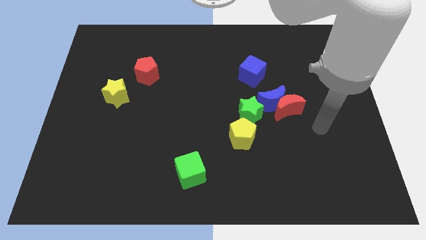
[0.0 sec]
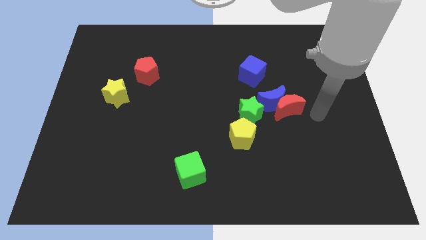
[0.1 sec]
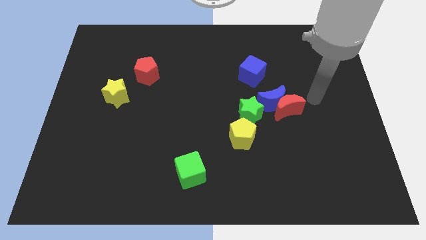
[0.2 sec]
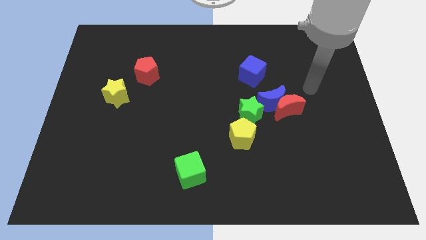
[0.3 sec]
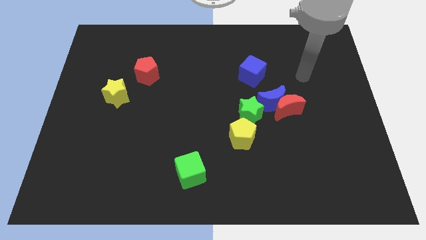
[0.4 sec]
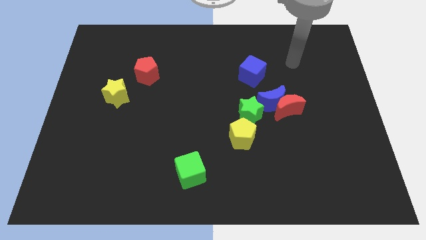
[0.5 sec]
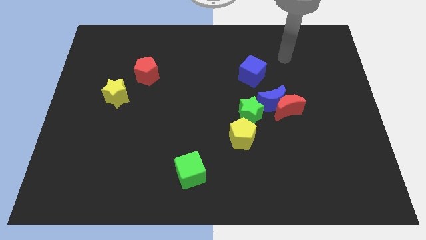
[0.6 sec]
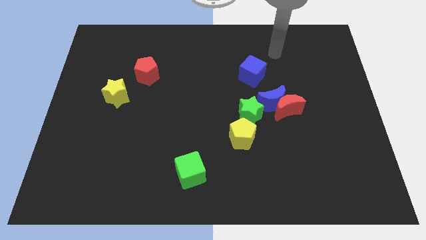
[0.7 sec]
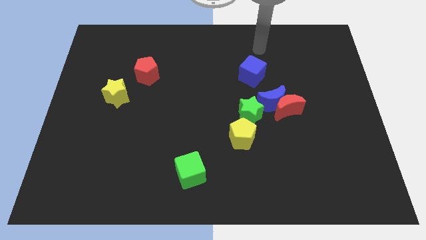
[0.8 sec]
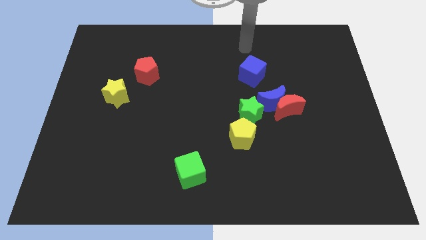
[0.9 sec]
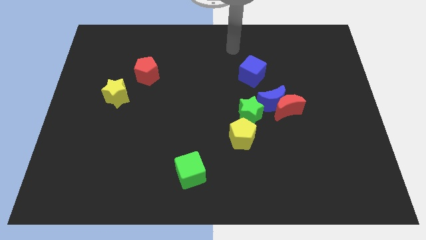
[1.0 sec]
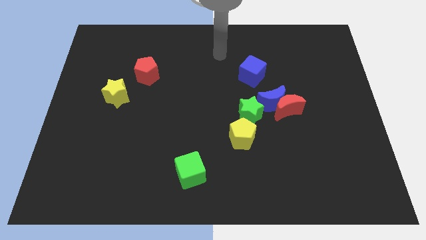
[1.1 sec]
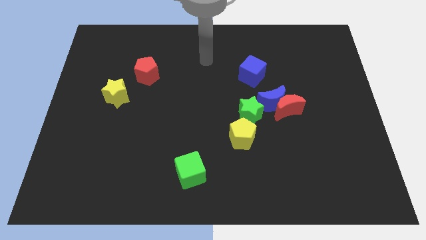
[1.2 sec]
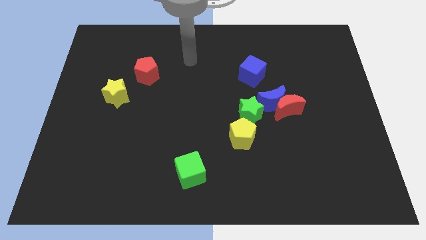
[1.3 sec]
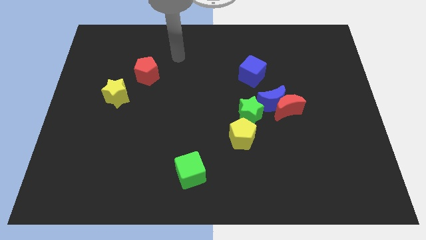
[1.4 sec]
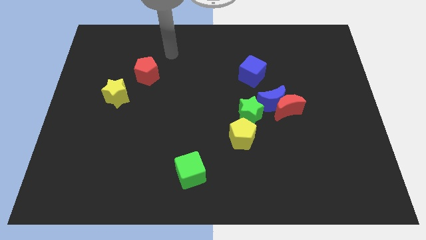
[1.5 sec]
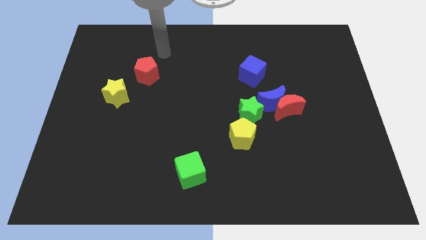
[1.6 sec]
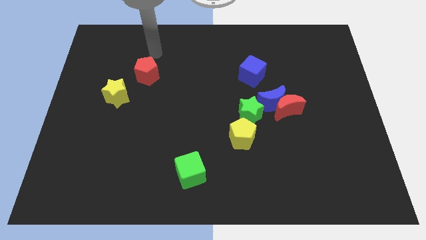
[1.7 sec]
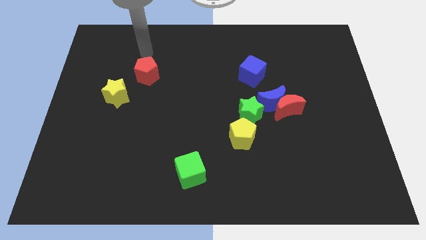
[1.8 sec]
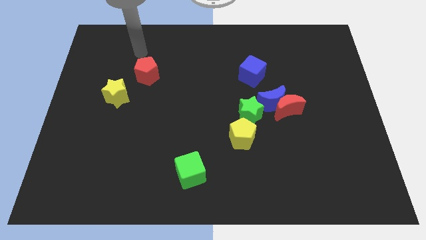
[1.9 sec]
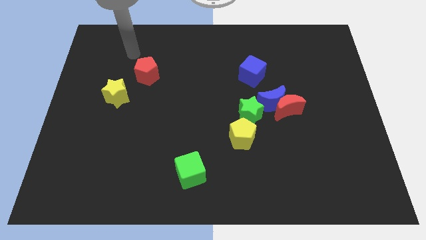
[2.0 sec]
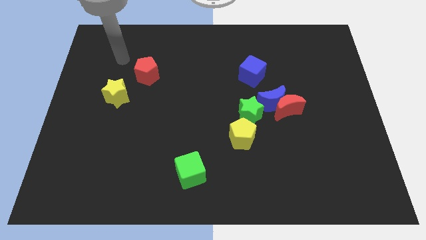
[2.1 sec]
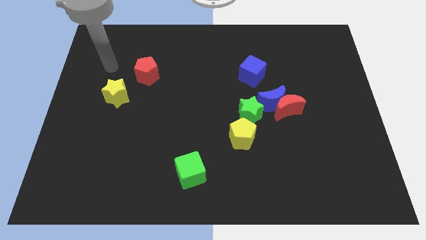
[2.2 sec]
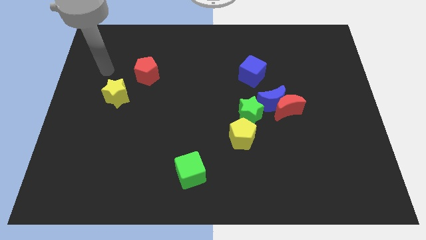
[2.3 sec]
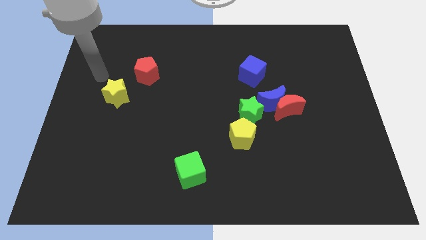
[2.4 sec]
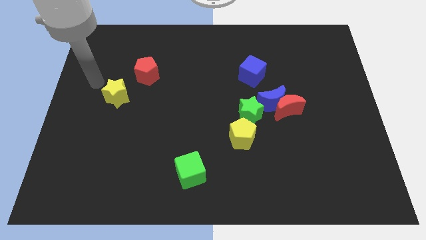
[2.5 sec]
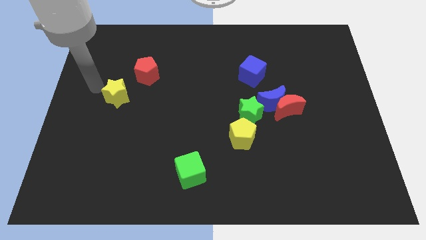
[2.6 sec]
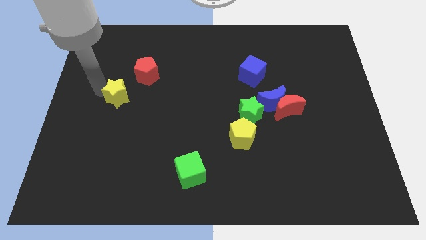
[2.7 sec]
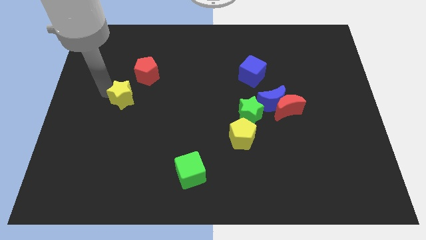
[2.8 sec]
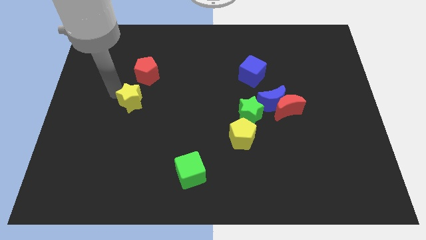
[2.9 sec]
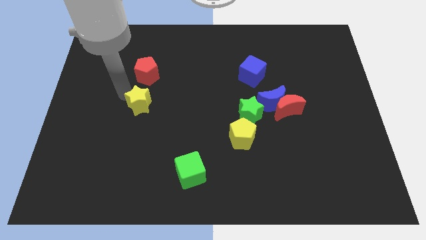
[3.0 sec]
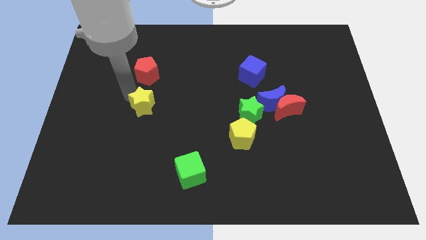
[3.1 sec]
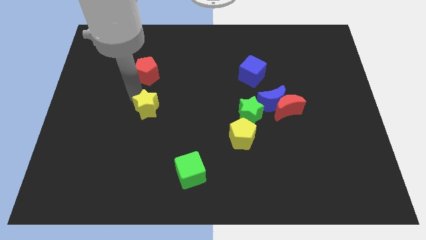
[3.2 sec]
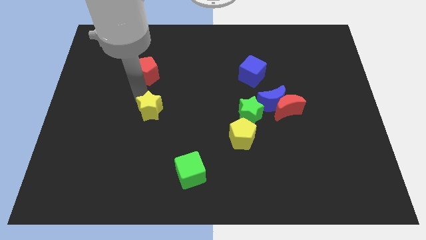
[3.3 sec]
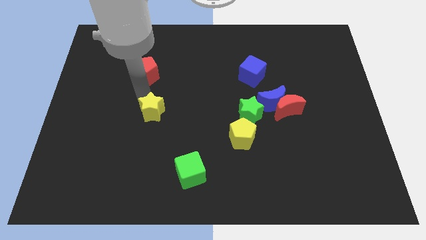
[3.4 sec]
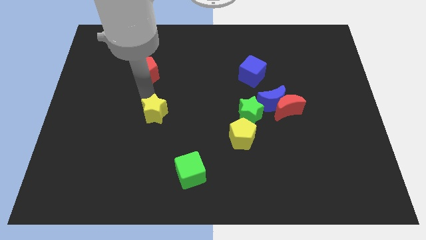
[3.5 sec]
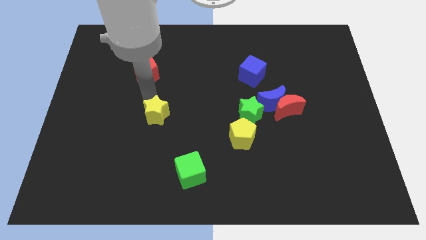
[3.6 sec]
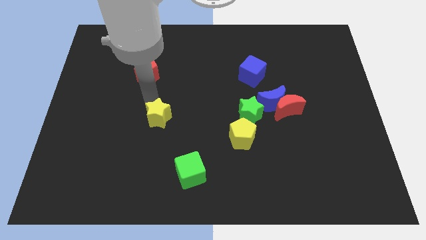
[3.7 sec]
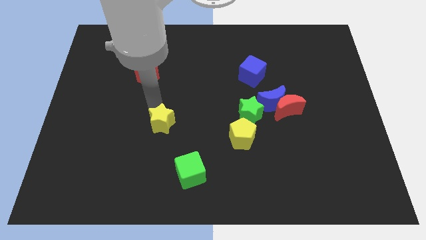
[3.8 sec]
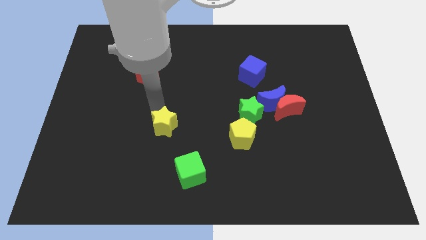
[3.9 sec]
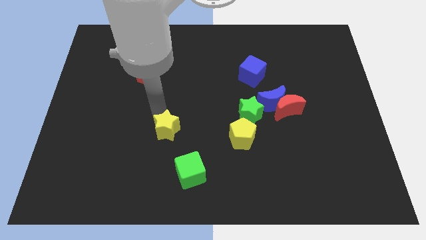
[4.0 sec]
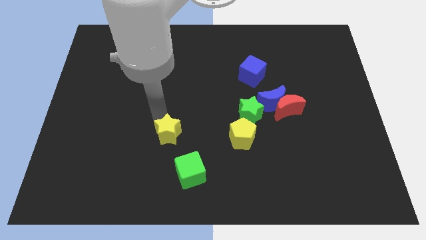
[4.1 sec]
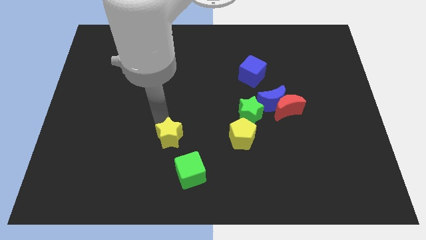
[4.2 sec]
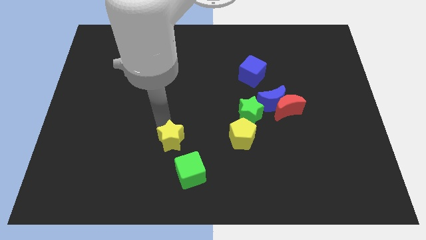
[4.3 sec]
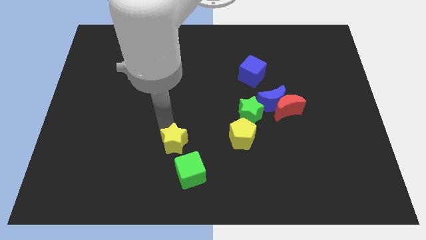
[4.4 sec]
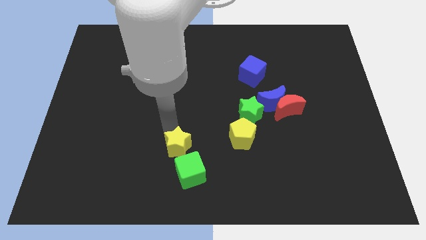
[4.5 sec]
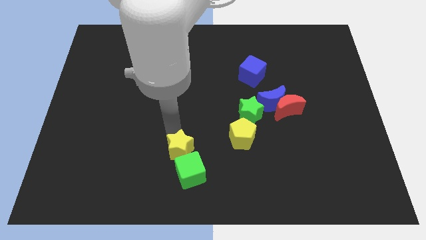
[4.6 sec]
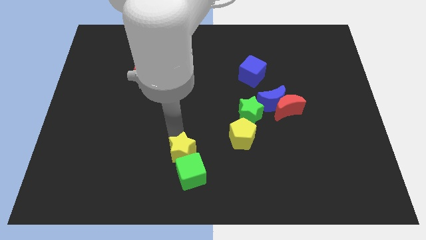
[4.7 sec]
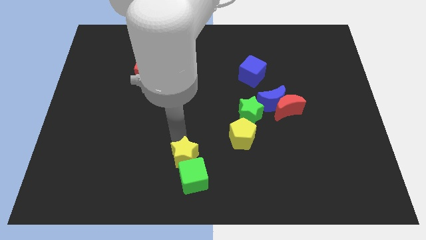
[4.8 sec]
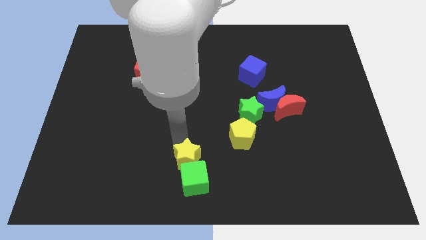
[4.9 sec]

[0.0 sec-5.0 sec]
push the yellow star to the green cube

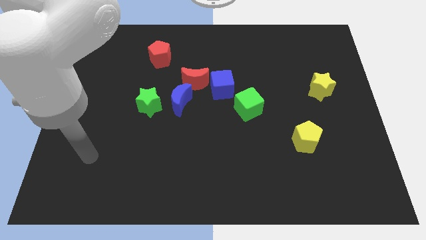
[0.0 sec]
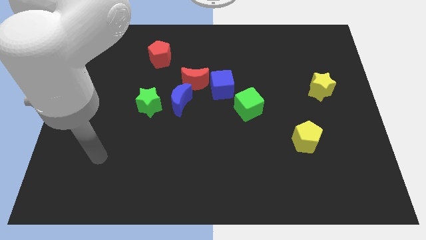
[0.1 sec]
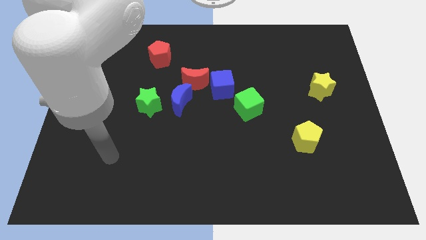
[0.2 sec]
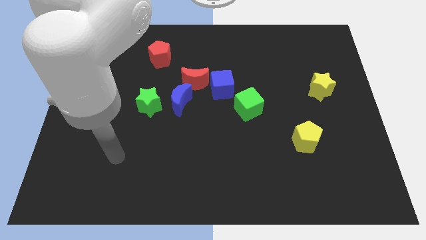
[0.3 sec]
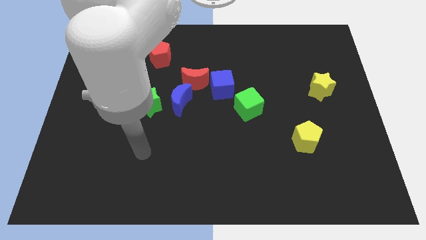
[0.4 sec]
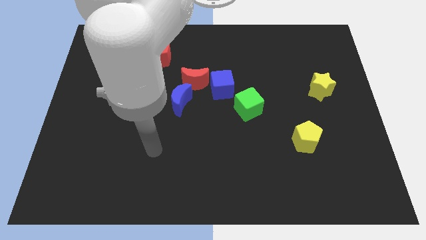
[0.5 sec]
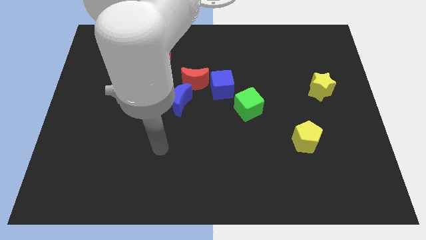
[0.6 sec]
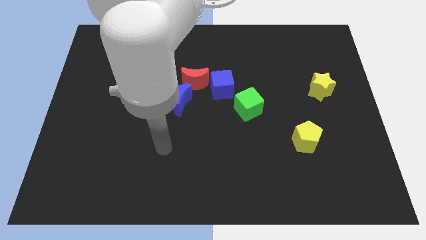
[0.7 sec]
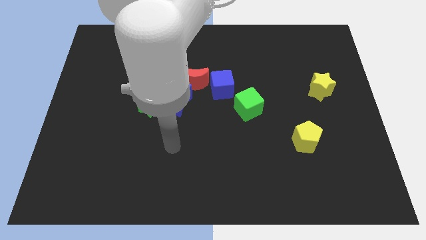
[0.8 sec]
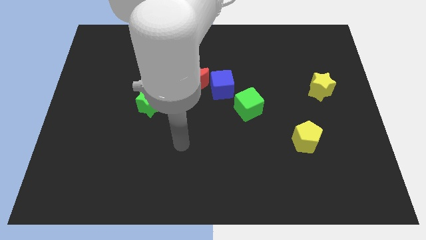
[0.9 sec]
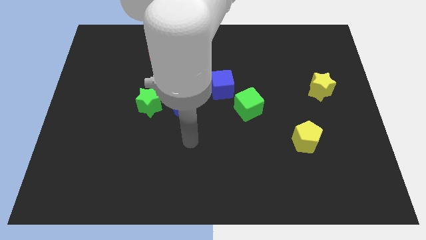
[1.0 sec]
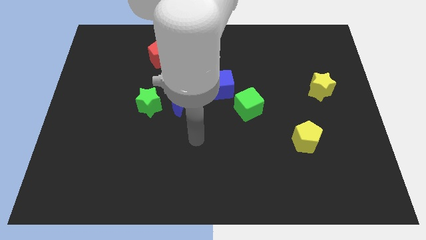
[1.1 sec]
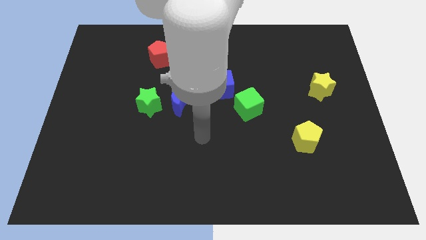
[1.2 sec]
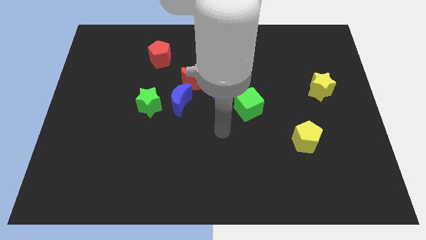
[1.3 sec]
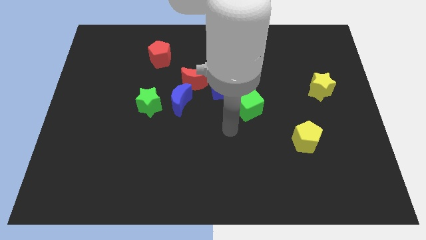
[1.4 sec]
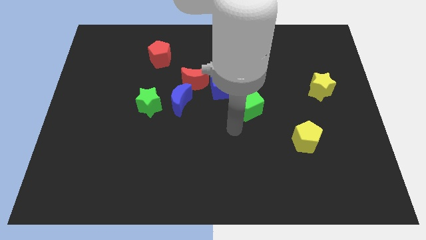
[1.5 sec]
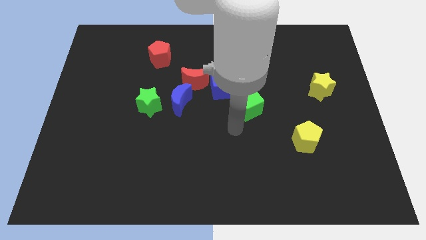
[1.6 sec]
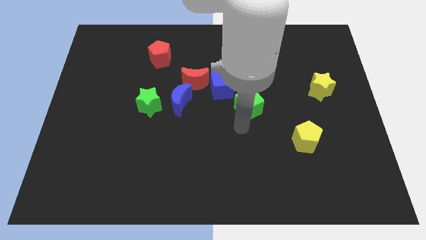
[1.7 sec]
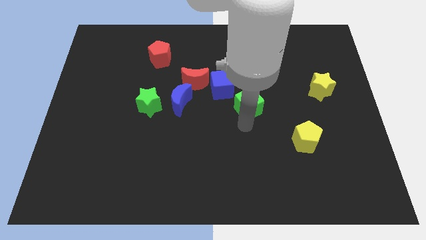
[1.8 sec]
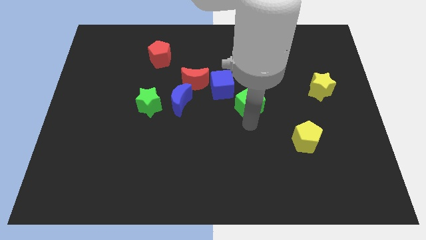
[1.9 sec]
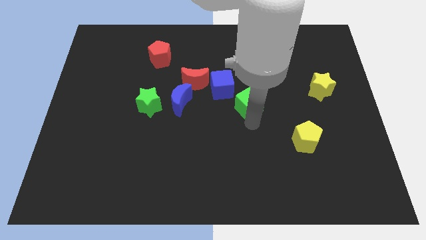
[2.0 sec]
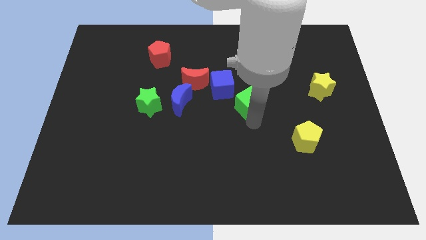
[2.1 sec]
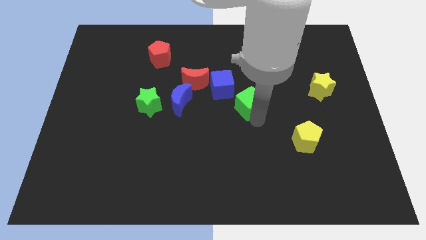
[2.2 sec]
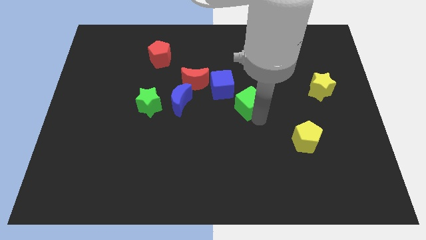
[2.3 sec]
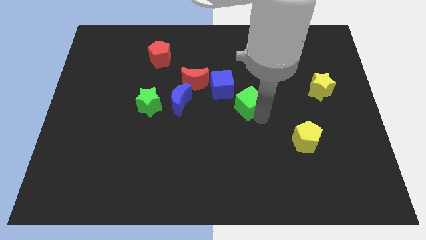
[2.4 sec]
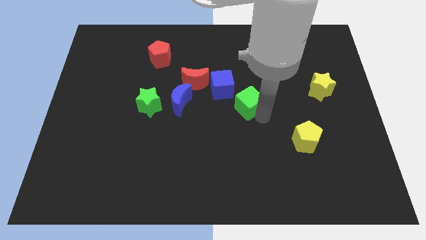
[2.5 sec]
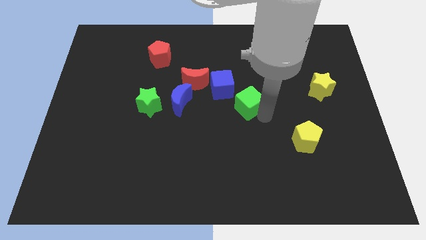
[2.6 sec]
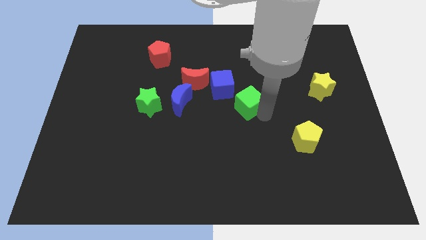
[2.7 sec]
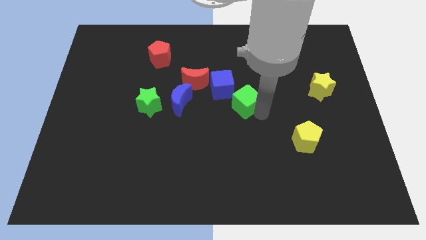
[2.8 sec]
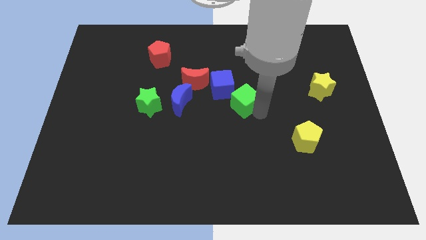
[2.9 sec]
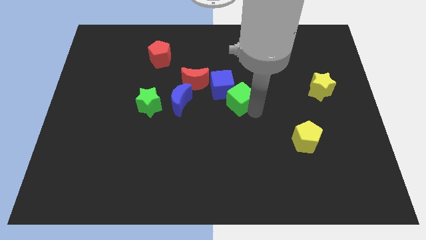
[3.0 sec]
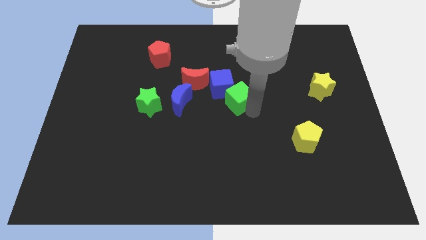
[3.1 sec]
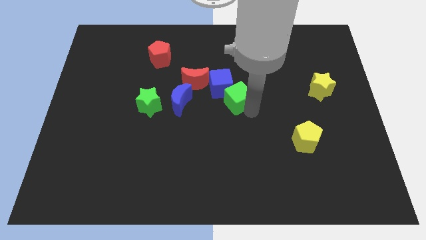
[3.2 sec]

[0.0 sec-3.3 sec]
put the green cube to the blue cube

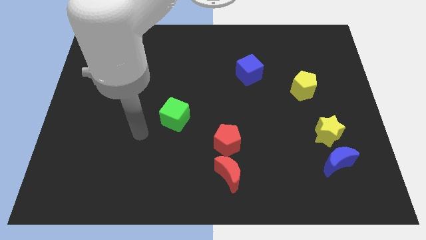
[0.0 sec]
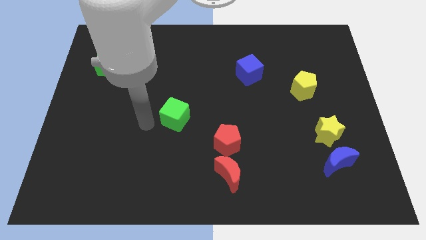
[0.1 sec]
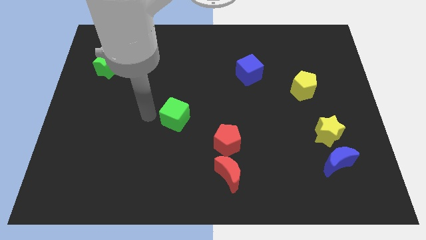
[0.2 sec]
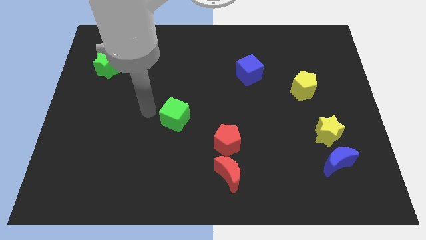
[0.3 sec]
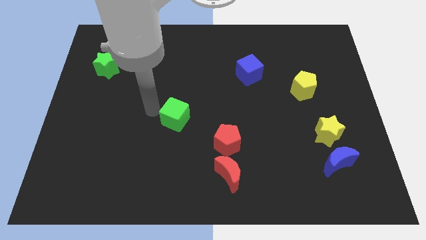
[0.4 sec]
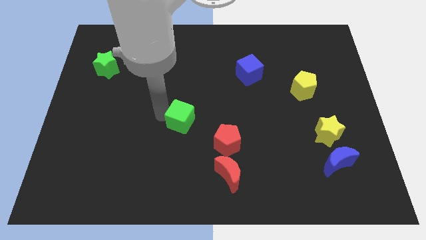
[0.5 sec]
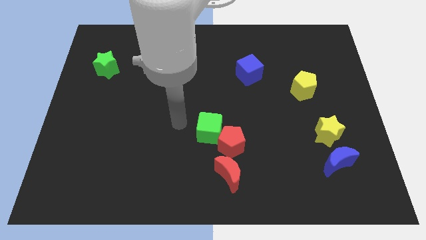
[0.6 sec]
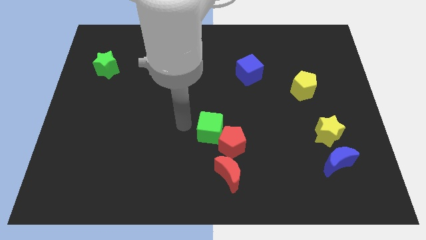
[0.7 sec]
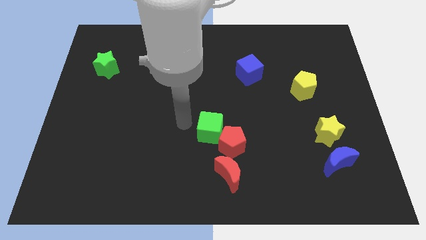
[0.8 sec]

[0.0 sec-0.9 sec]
put the green cube next to the red pentagon
